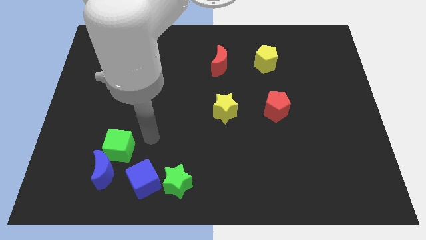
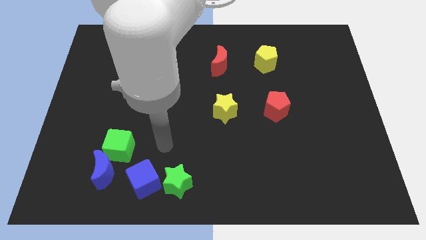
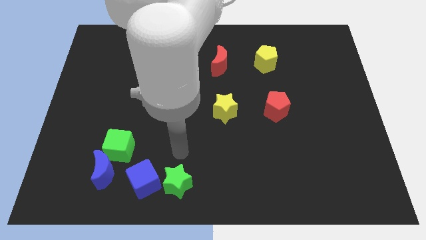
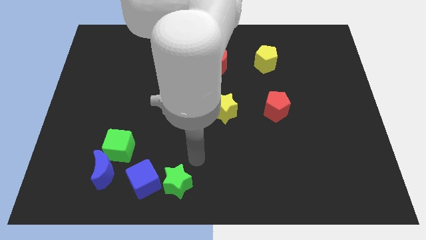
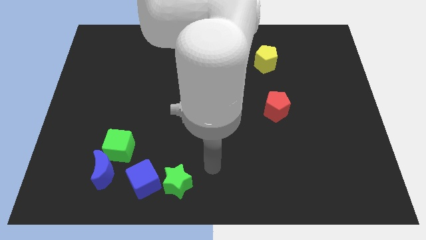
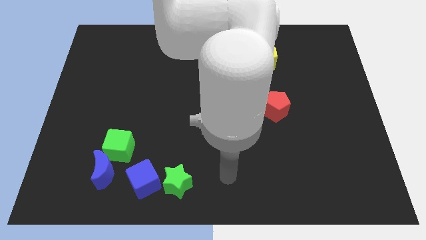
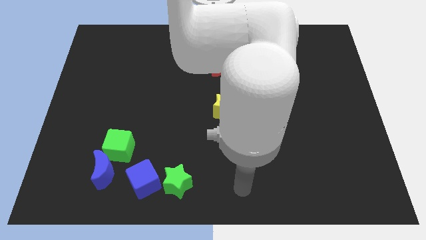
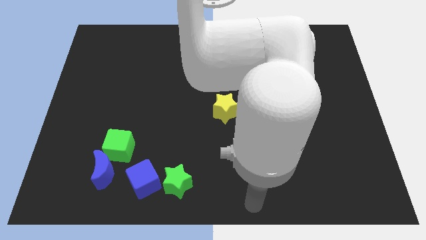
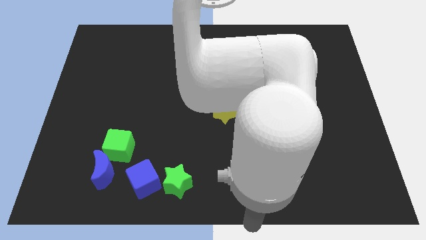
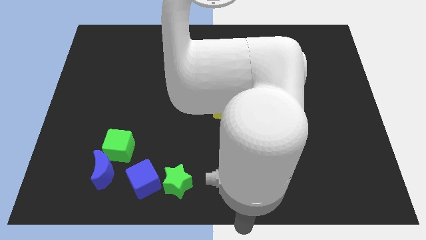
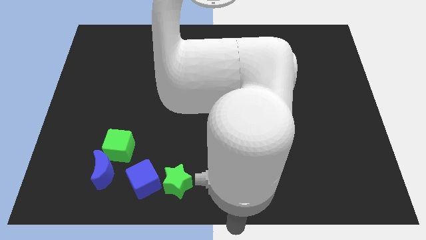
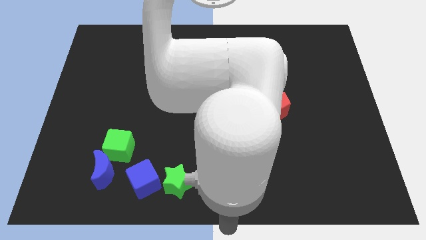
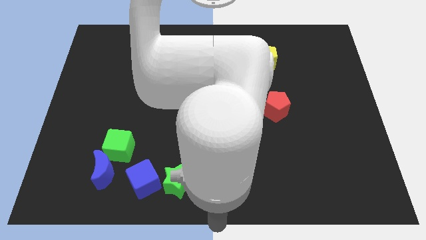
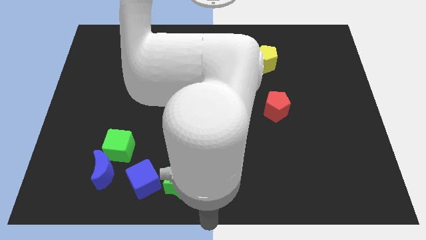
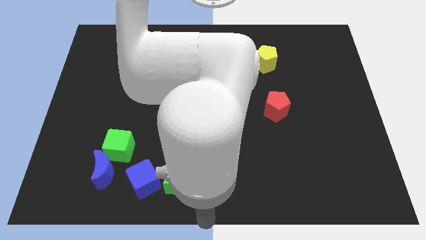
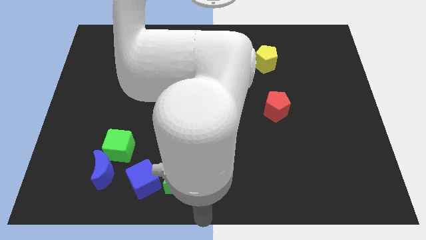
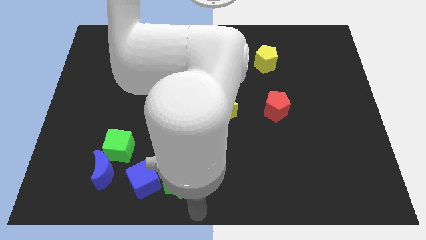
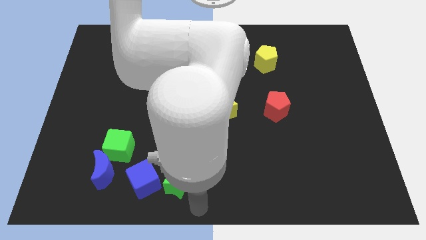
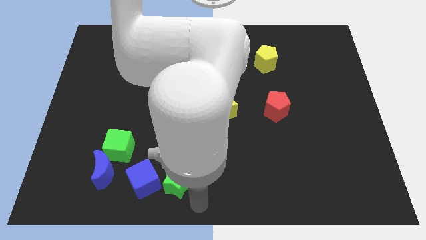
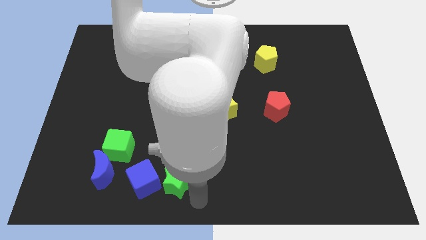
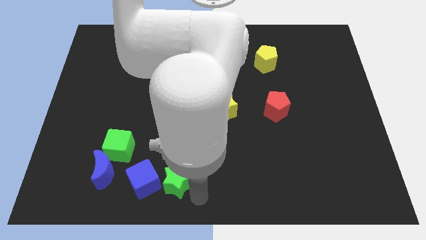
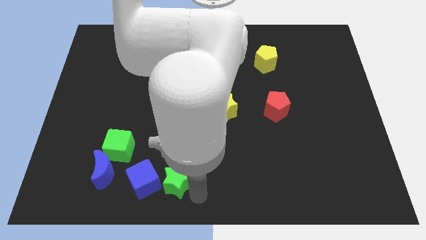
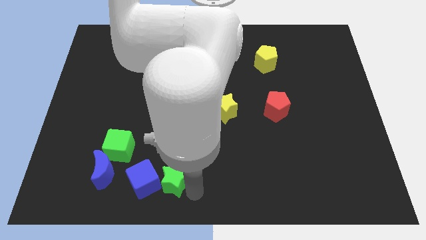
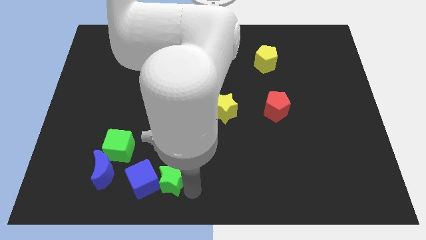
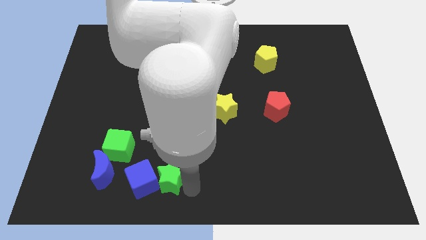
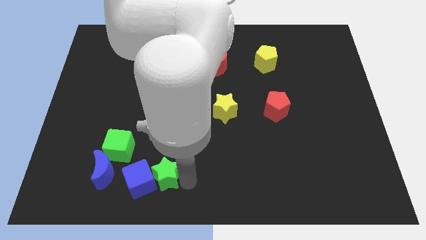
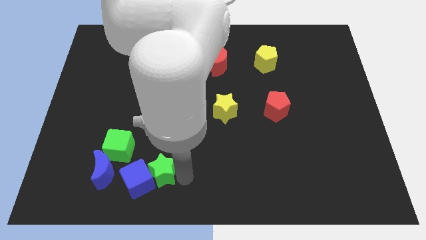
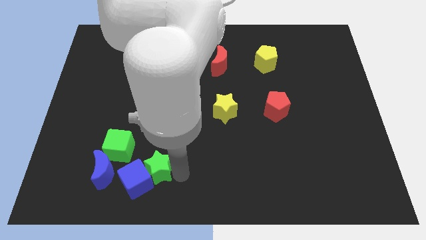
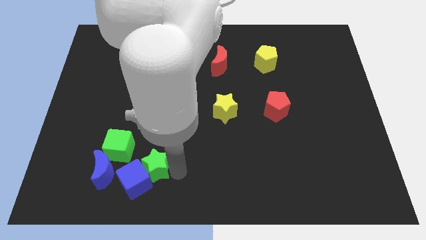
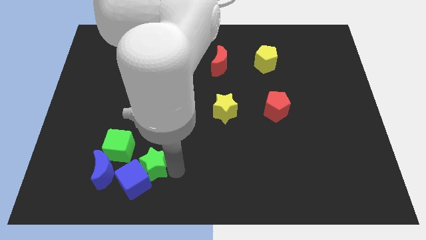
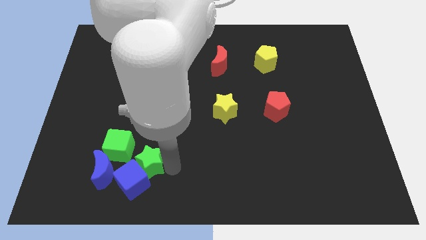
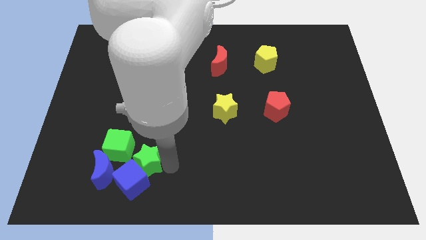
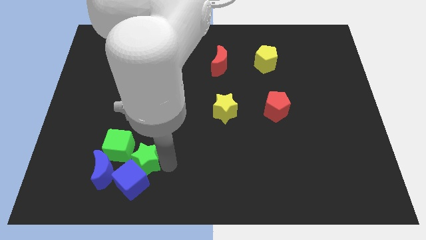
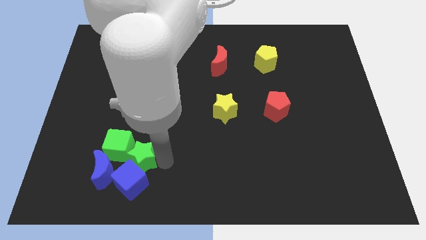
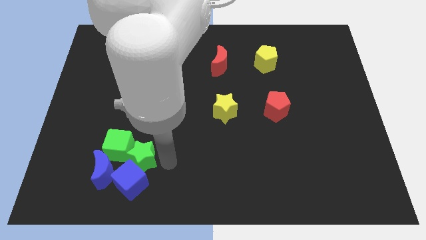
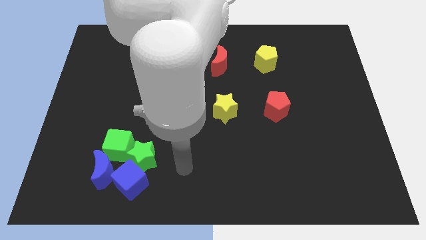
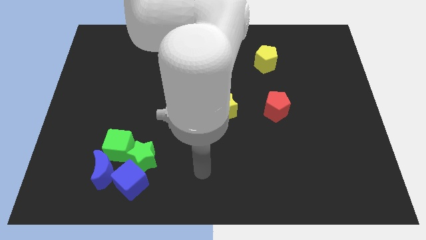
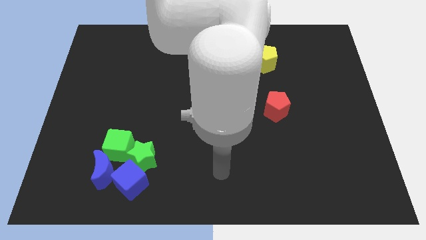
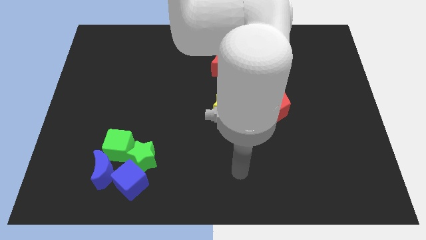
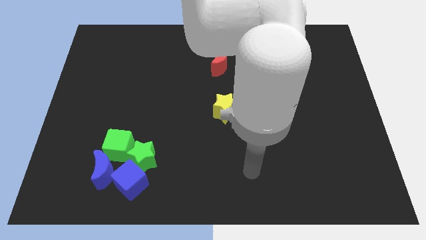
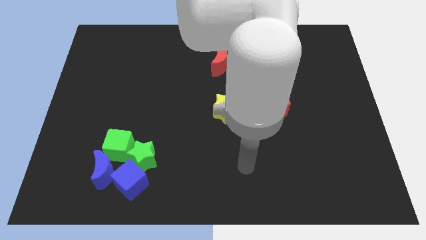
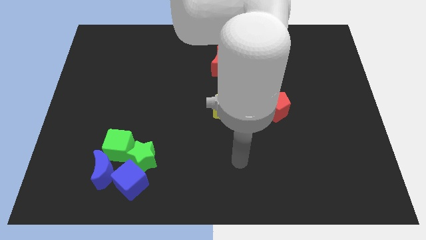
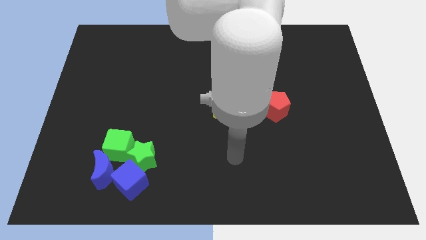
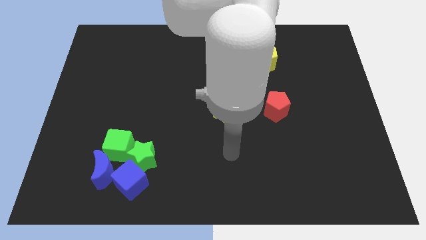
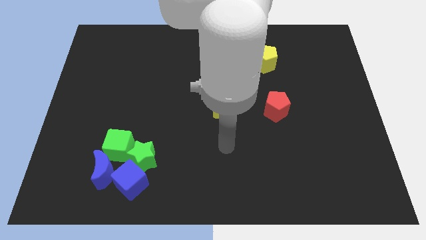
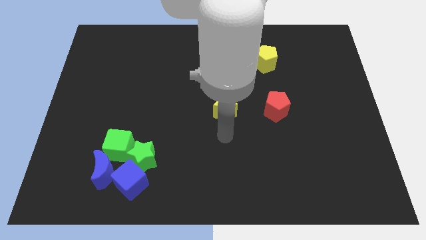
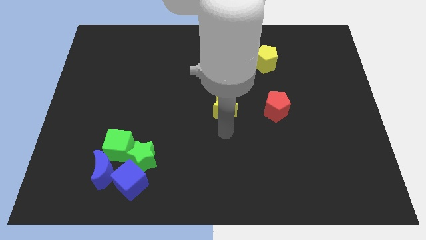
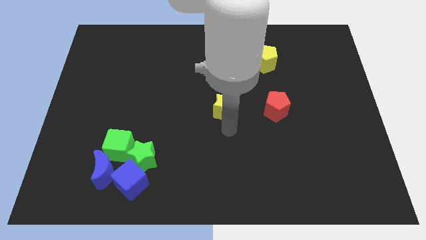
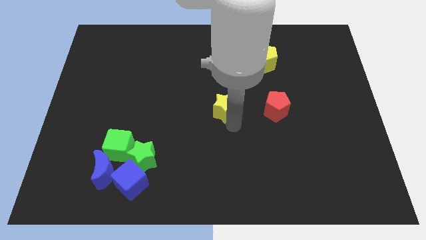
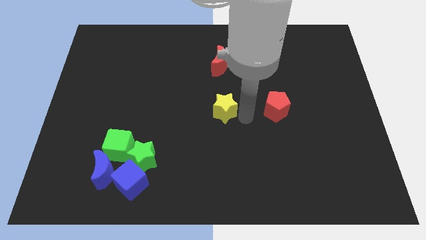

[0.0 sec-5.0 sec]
push green star into green cube

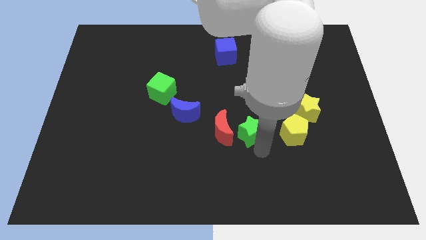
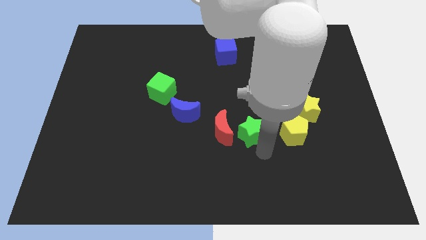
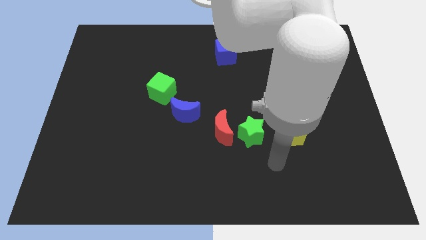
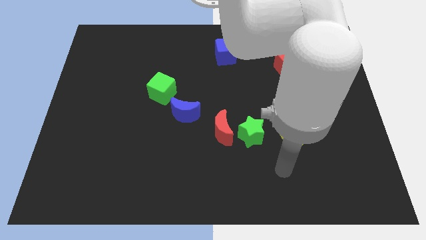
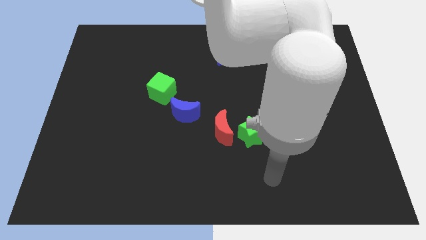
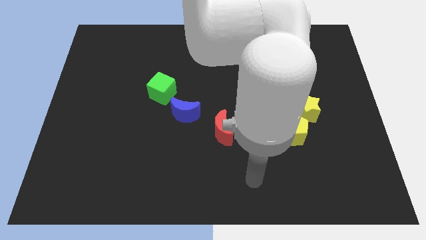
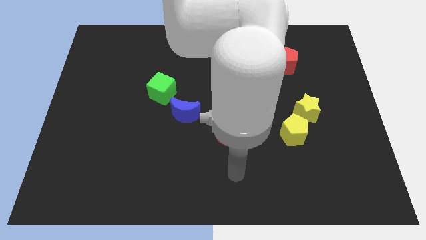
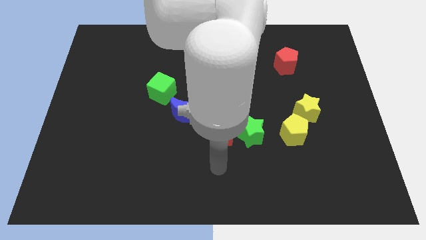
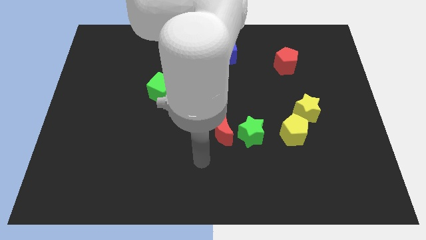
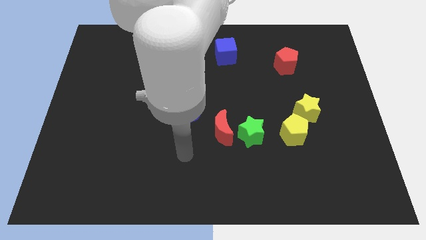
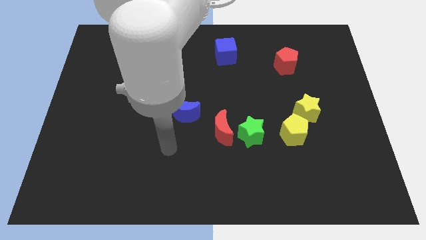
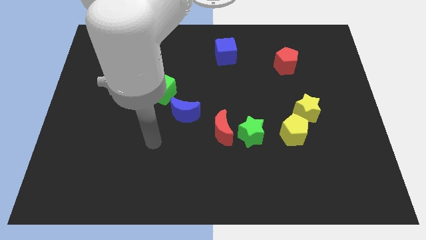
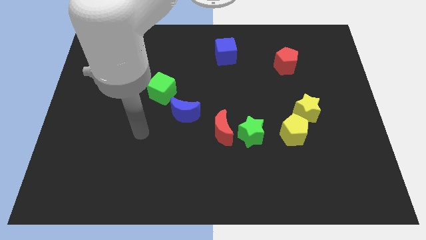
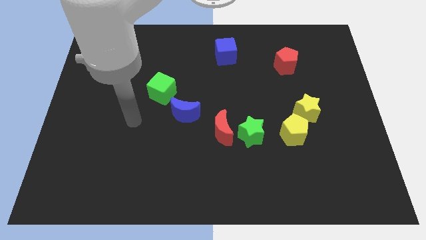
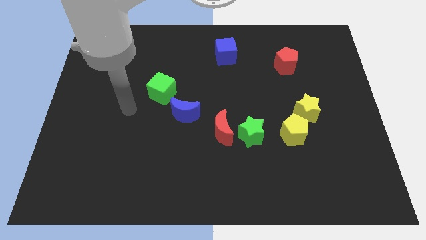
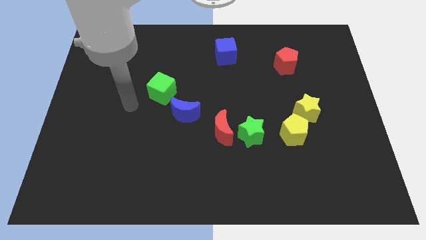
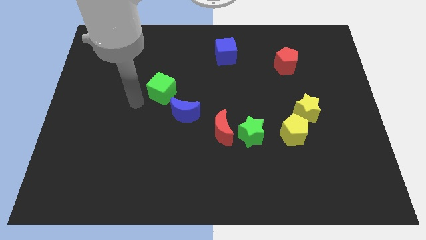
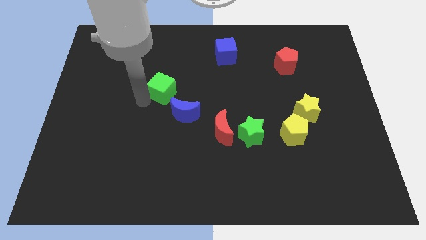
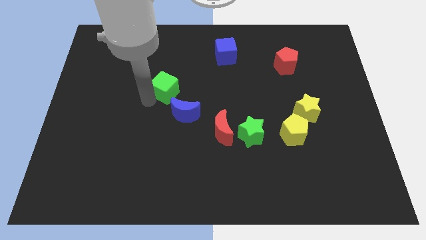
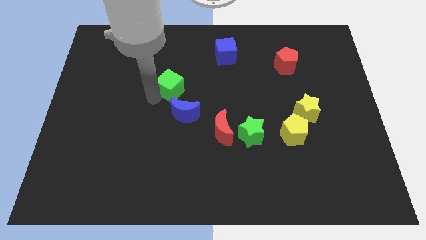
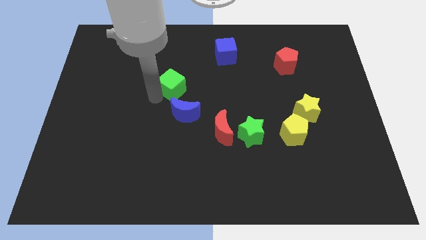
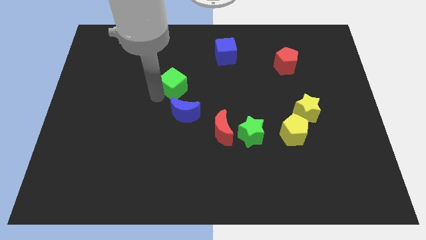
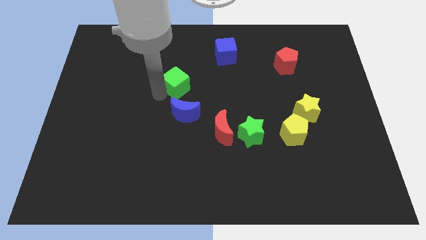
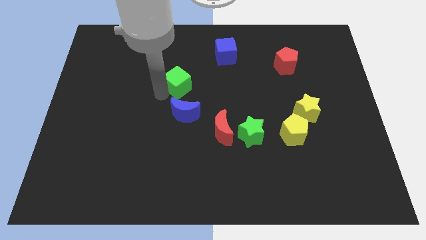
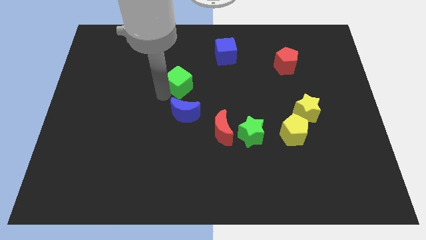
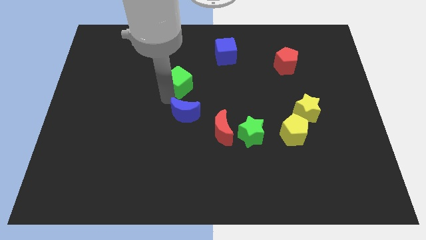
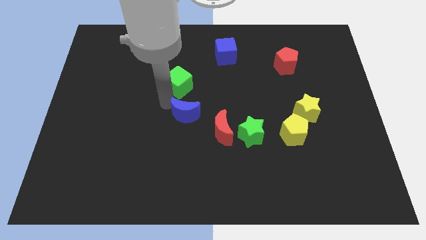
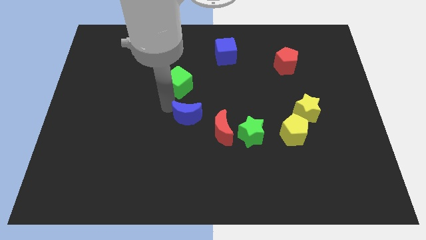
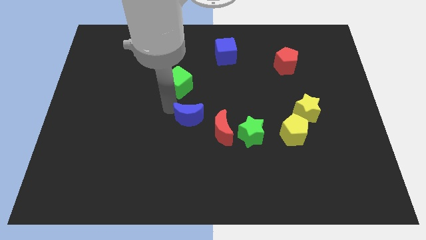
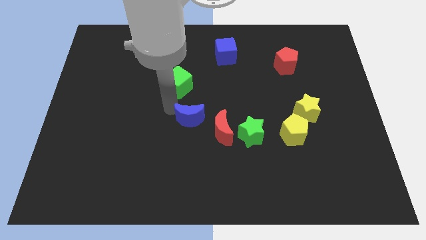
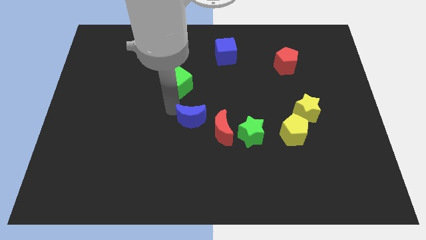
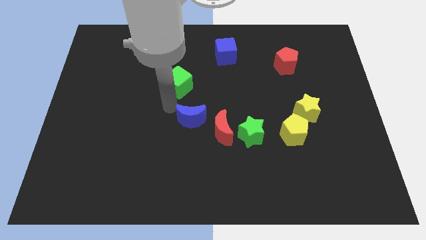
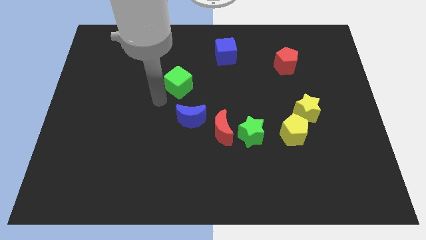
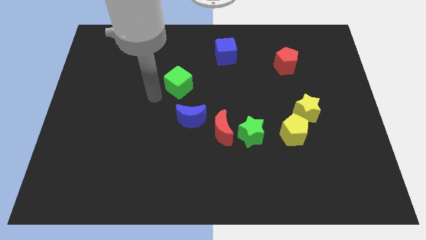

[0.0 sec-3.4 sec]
move green cube above the blue moon

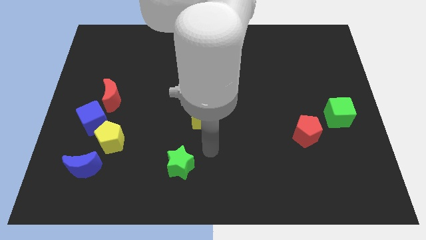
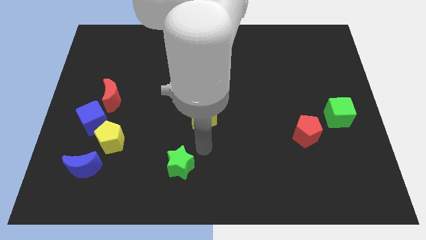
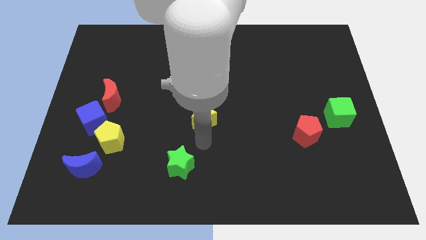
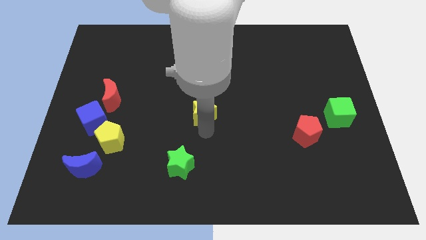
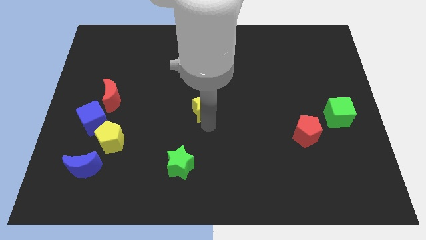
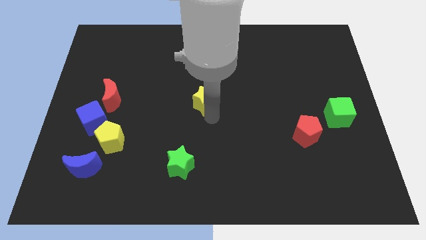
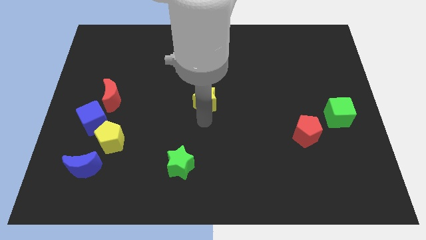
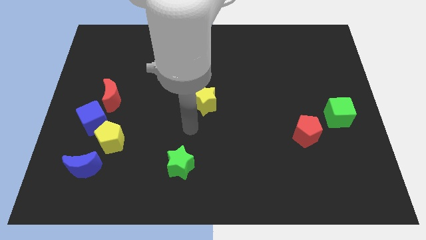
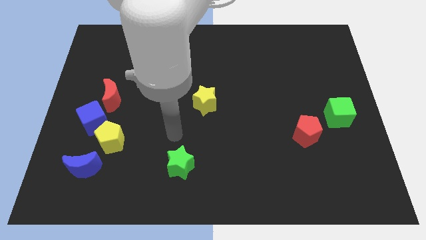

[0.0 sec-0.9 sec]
move the yellow star to the center of the board

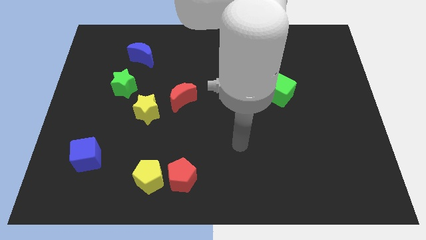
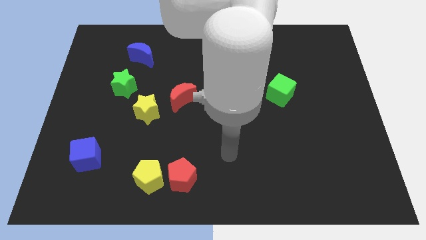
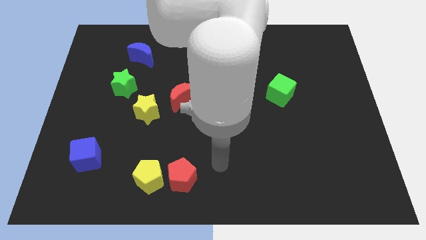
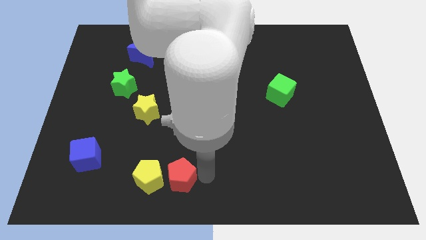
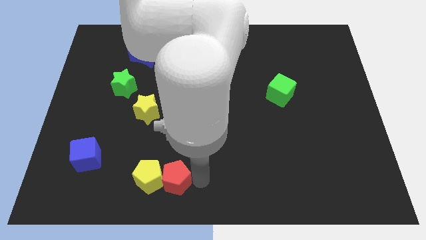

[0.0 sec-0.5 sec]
point your arm to the right side of red pentagon
